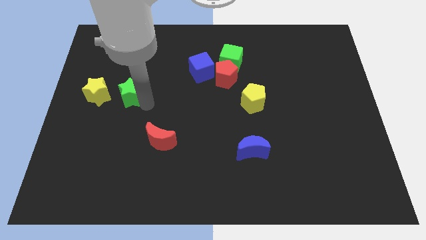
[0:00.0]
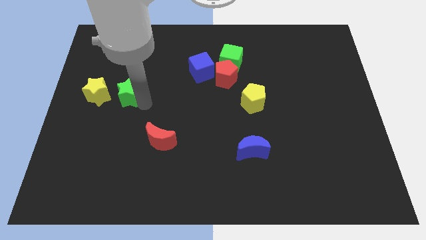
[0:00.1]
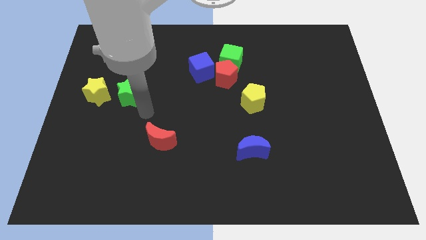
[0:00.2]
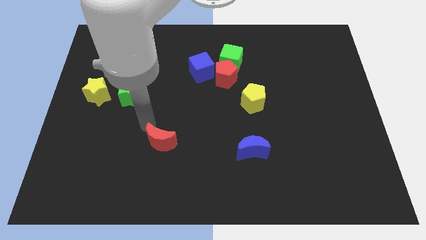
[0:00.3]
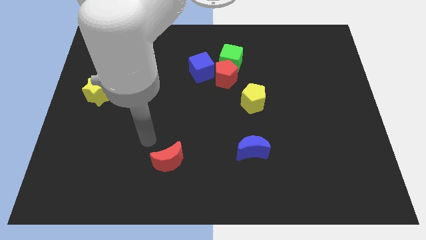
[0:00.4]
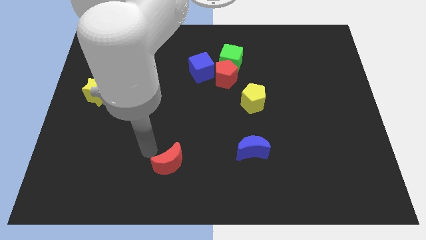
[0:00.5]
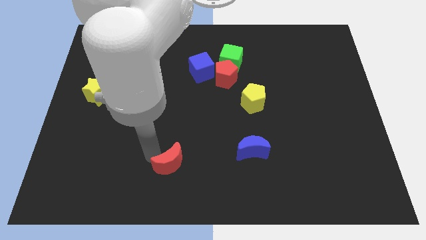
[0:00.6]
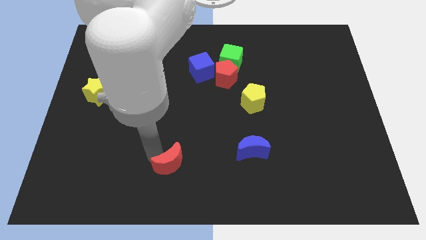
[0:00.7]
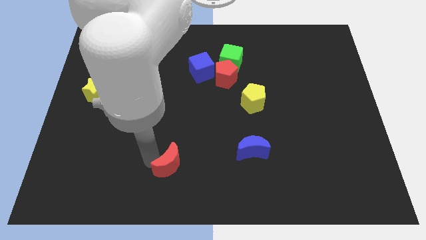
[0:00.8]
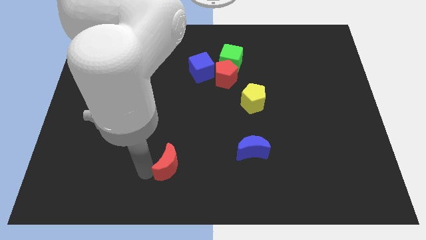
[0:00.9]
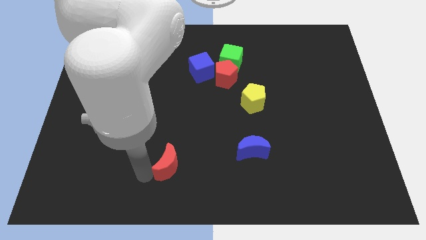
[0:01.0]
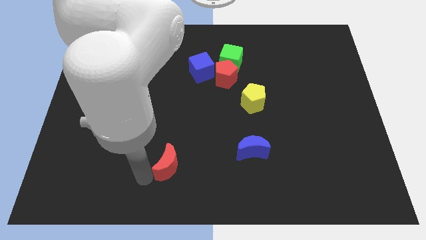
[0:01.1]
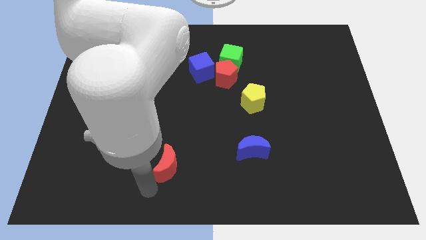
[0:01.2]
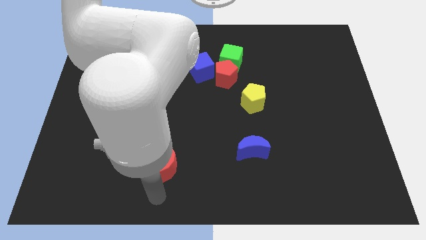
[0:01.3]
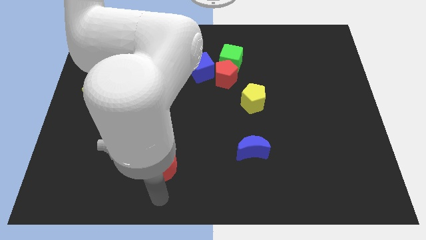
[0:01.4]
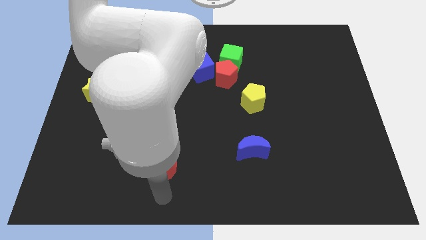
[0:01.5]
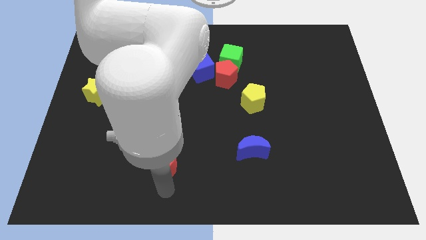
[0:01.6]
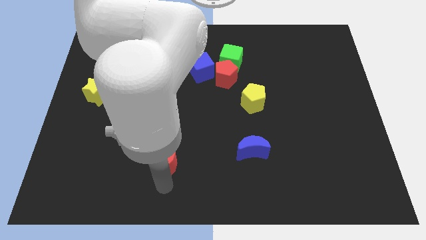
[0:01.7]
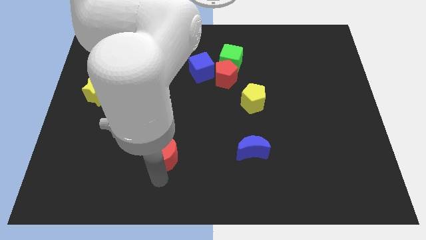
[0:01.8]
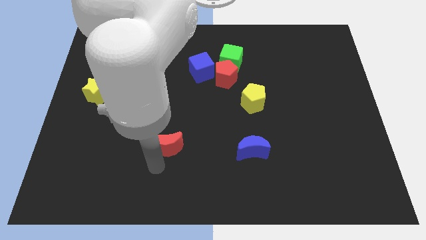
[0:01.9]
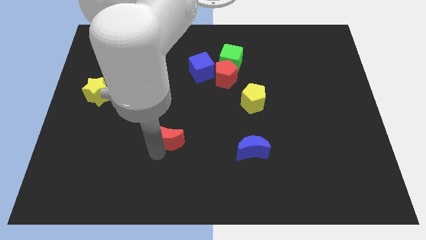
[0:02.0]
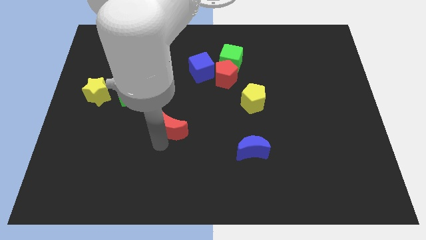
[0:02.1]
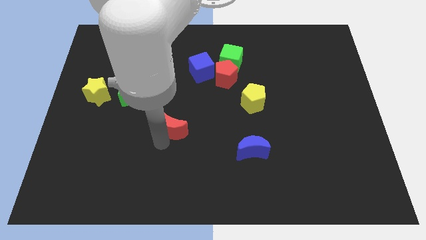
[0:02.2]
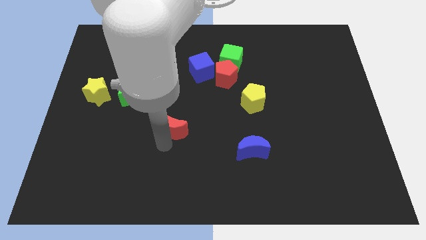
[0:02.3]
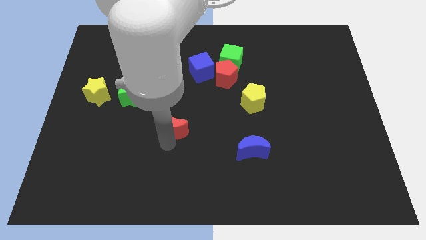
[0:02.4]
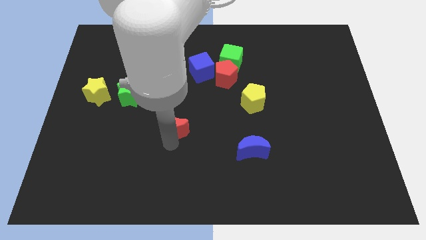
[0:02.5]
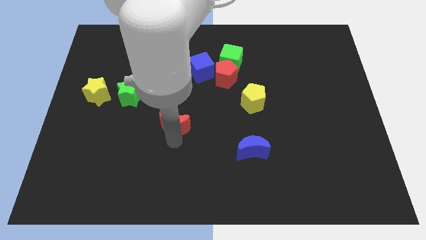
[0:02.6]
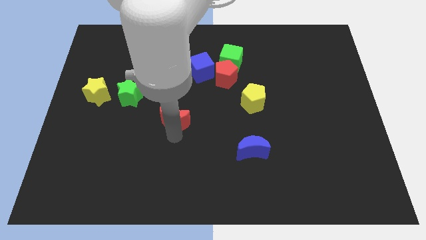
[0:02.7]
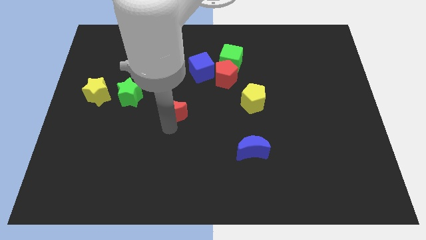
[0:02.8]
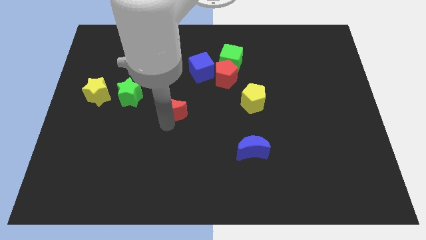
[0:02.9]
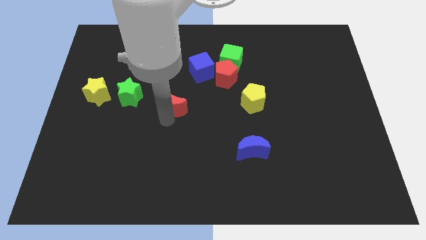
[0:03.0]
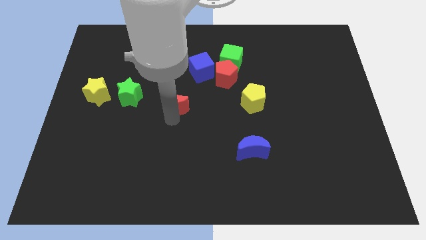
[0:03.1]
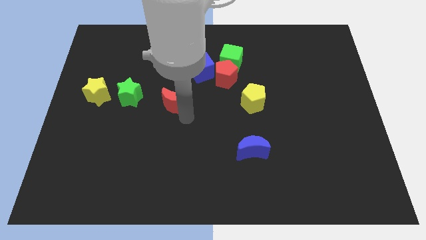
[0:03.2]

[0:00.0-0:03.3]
move red crescent towards center

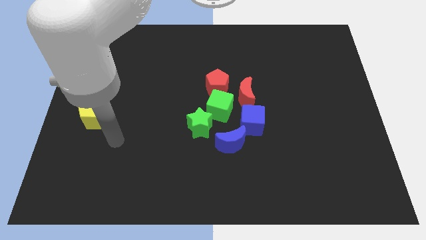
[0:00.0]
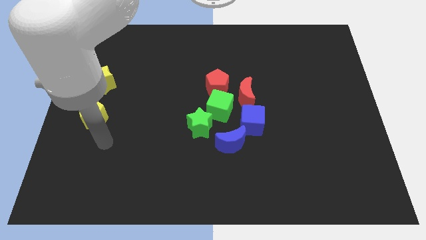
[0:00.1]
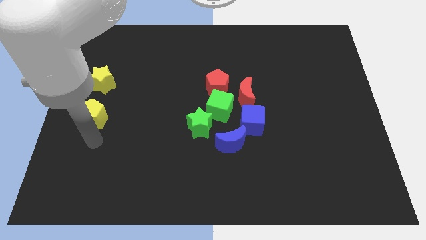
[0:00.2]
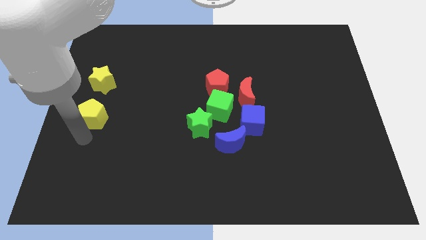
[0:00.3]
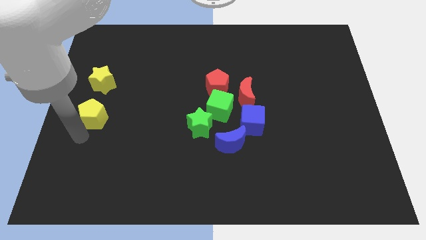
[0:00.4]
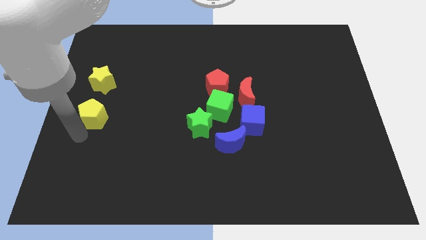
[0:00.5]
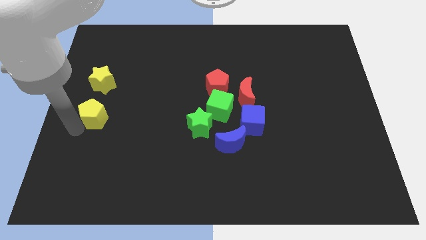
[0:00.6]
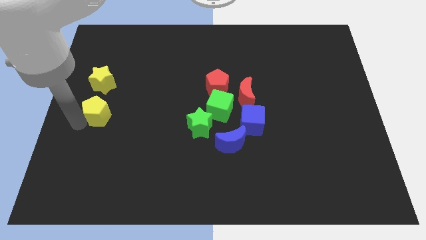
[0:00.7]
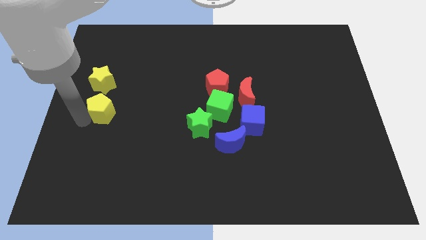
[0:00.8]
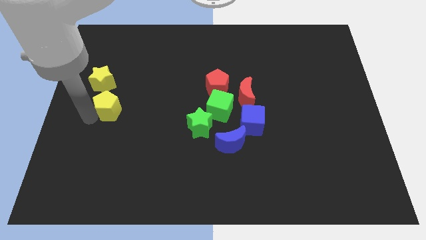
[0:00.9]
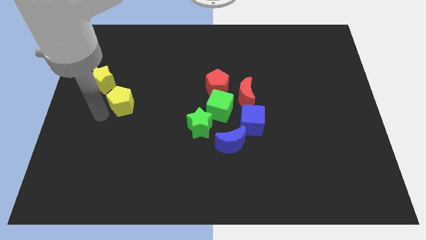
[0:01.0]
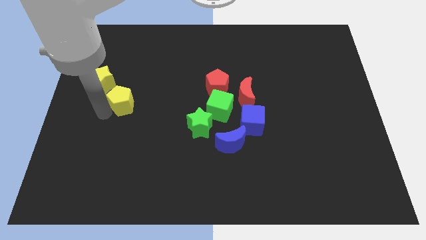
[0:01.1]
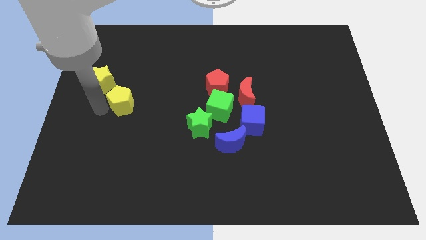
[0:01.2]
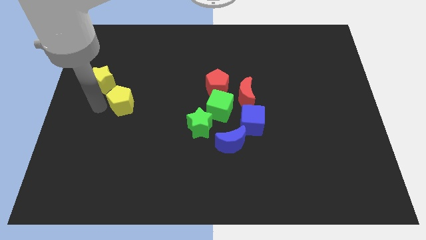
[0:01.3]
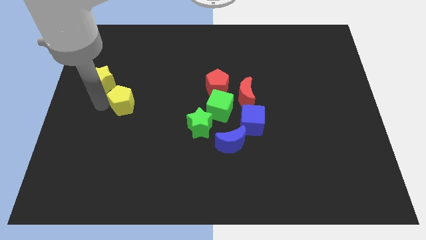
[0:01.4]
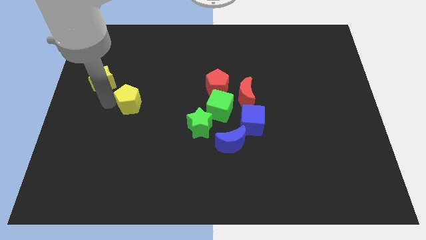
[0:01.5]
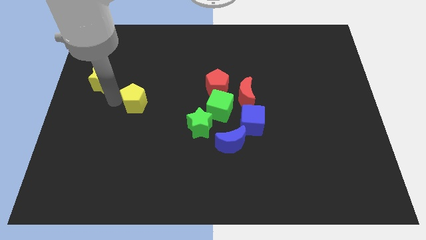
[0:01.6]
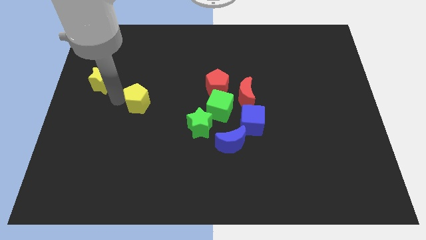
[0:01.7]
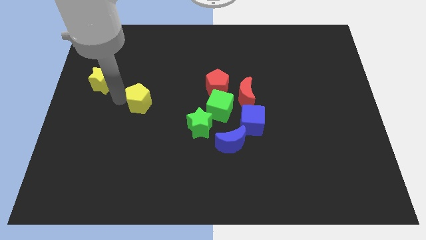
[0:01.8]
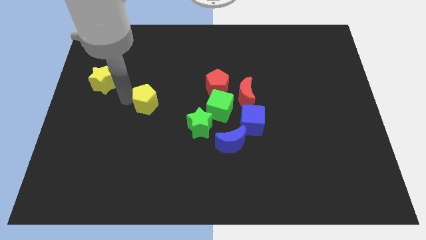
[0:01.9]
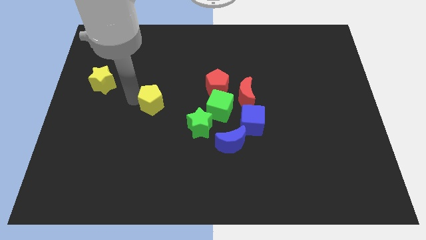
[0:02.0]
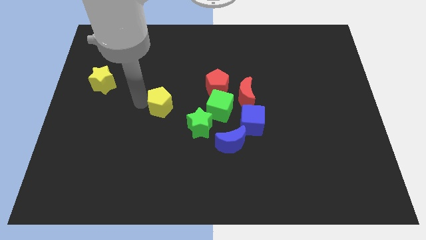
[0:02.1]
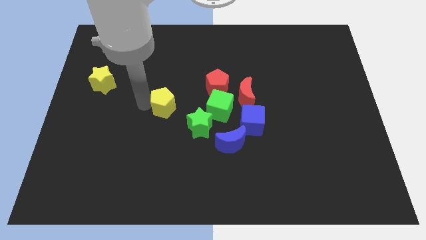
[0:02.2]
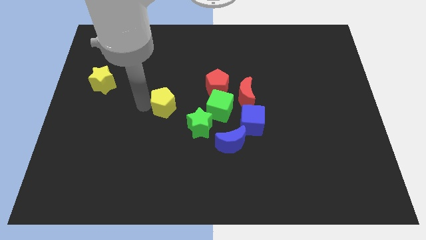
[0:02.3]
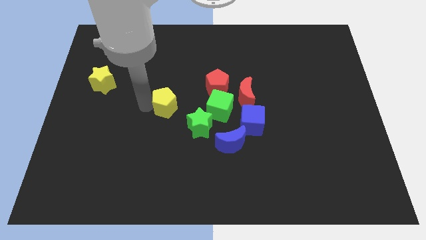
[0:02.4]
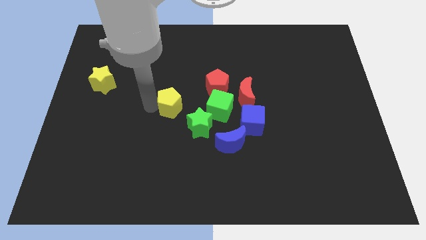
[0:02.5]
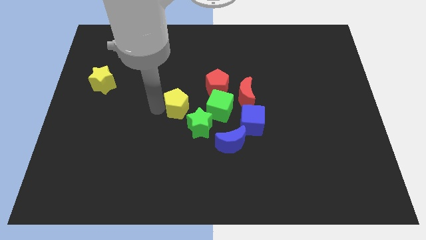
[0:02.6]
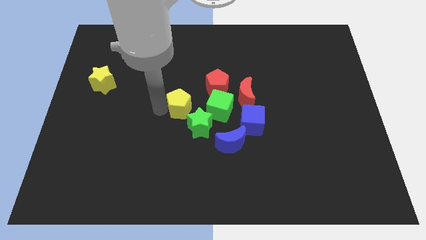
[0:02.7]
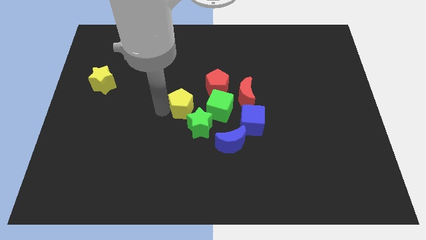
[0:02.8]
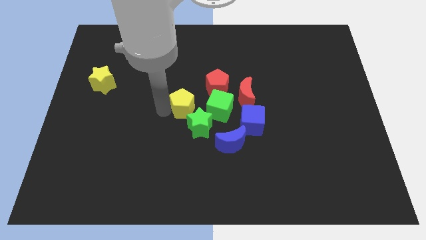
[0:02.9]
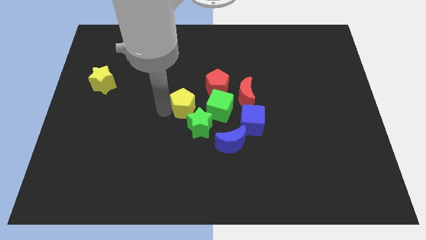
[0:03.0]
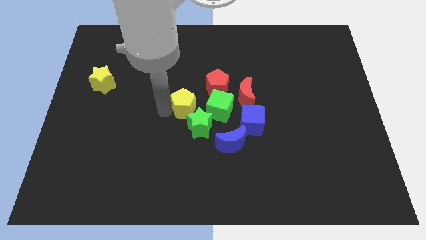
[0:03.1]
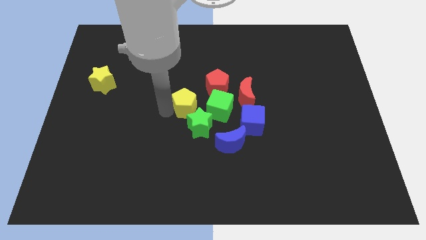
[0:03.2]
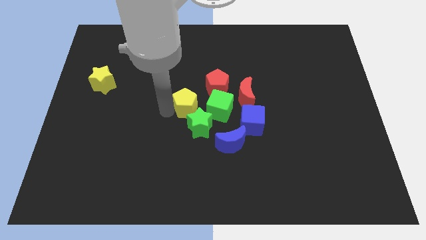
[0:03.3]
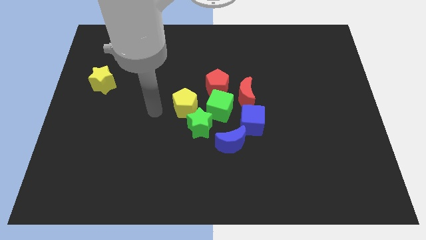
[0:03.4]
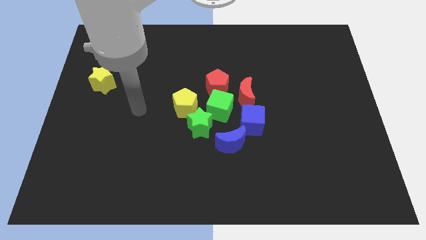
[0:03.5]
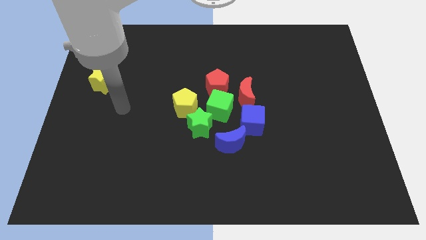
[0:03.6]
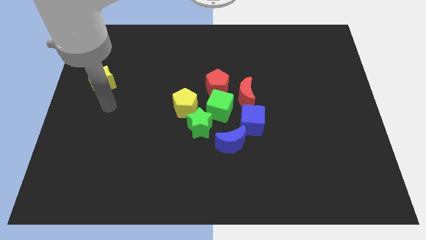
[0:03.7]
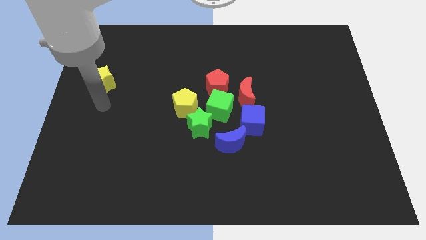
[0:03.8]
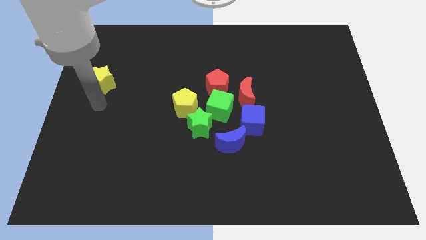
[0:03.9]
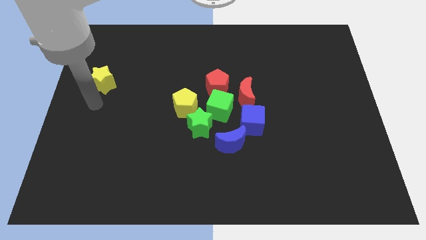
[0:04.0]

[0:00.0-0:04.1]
move the yellow pentagon to the left side of the green cube

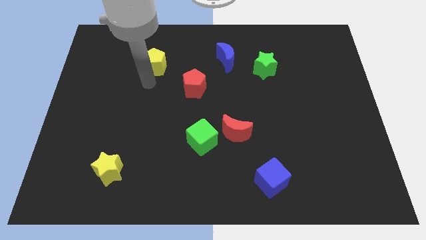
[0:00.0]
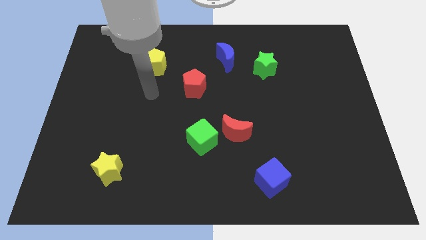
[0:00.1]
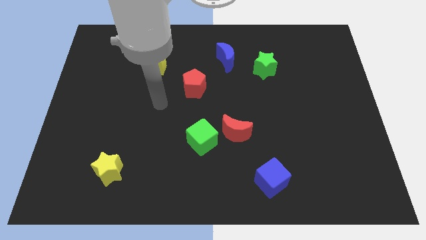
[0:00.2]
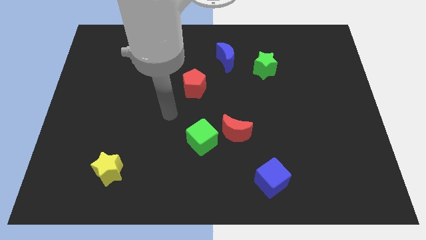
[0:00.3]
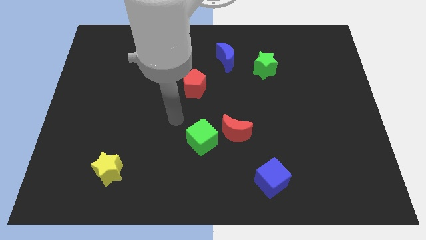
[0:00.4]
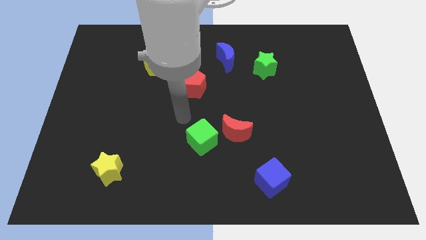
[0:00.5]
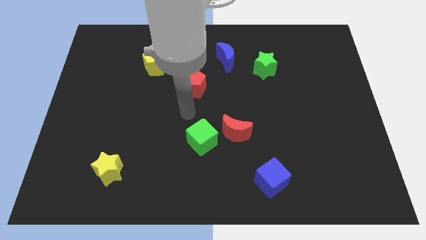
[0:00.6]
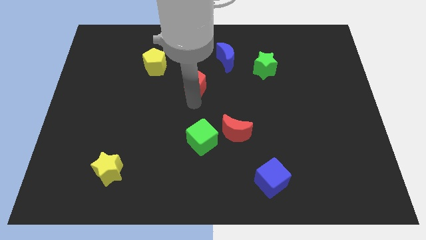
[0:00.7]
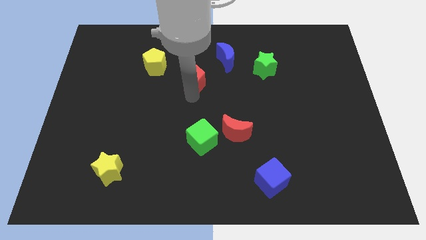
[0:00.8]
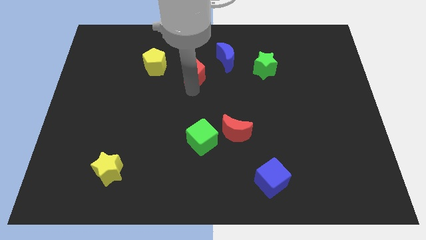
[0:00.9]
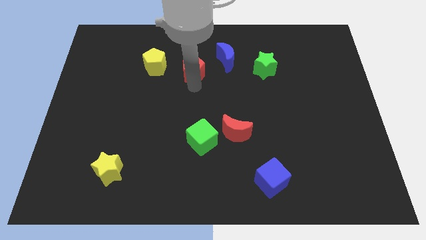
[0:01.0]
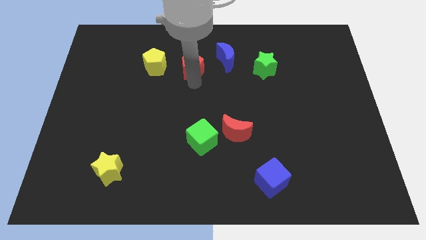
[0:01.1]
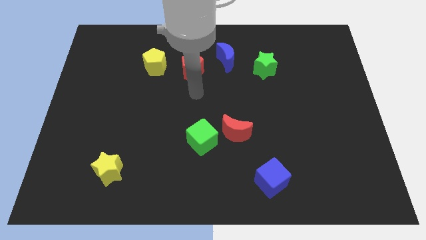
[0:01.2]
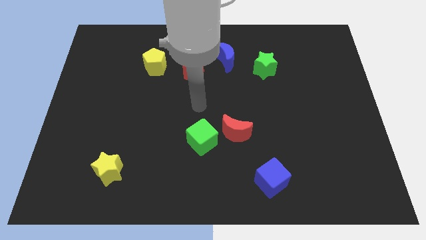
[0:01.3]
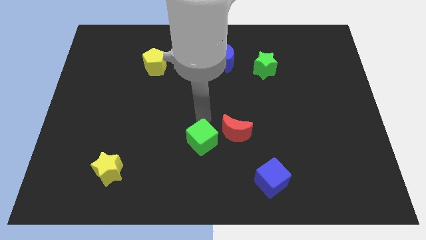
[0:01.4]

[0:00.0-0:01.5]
move the red pentagon to the right of the yellow pentagon

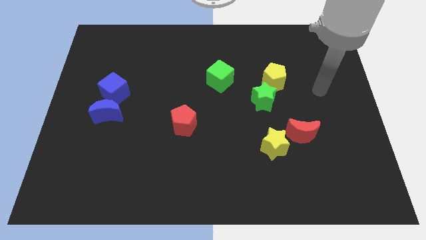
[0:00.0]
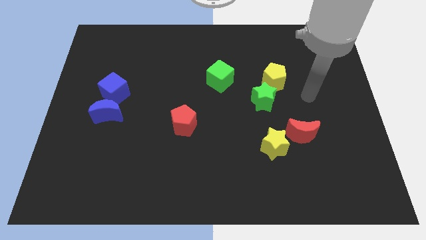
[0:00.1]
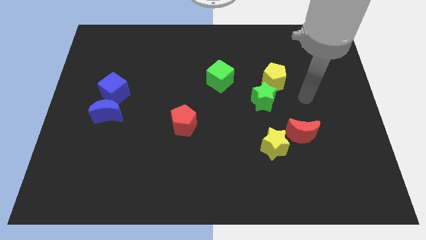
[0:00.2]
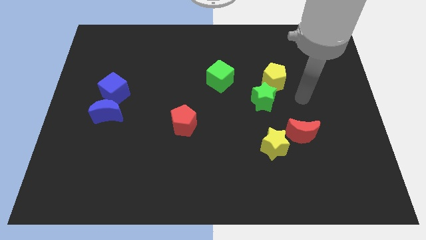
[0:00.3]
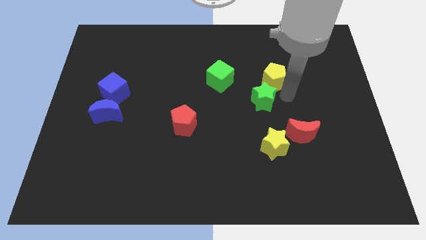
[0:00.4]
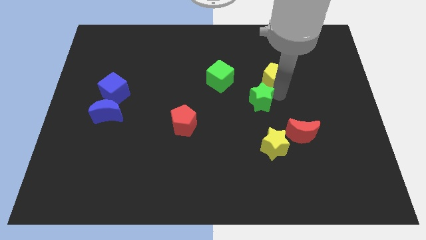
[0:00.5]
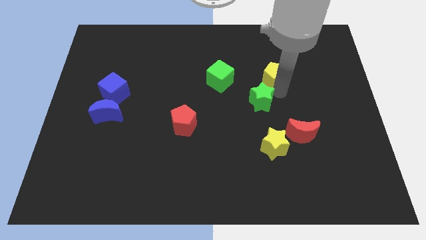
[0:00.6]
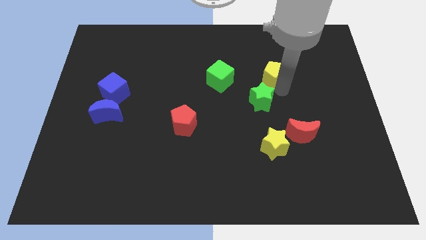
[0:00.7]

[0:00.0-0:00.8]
touch green star and yellow pentagon
